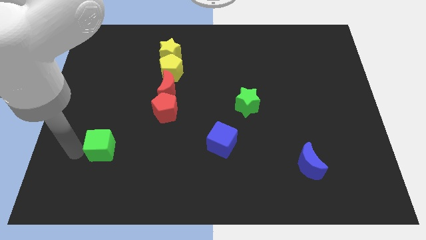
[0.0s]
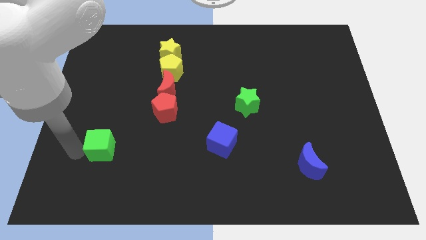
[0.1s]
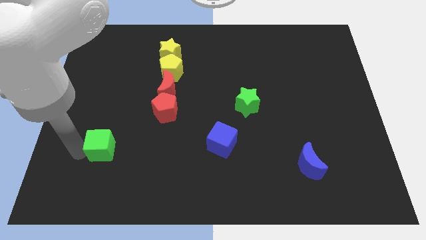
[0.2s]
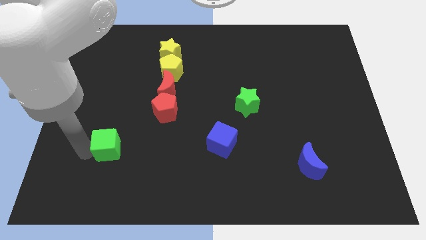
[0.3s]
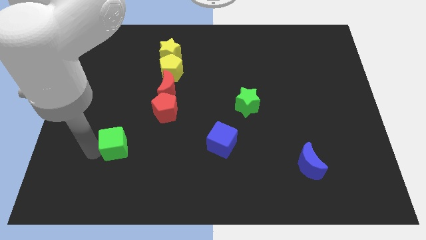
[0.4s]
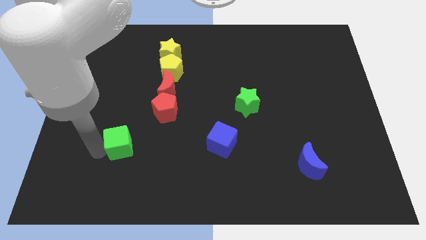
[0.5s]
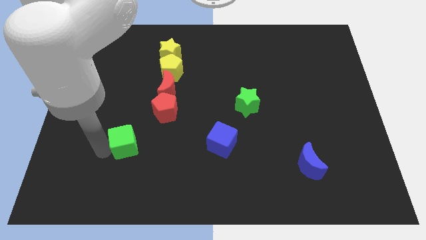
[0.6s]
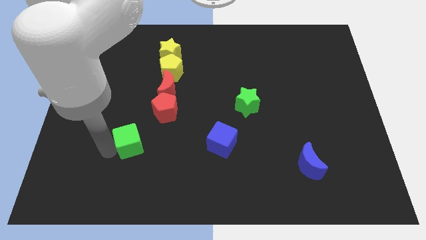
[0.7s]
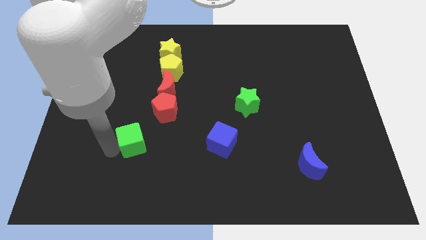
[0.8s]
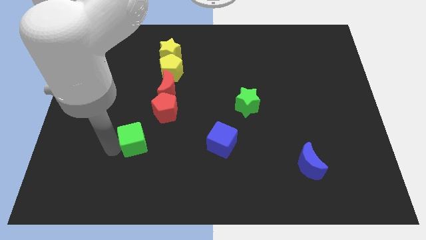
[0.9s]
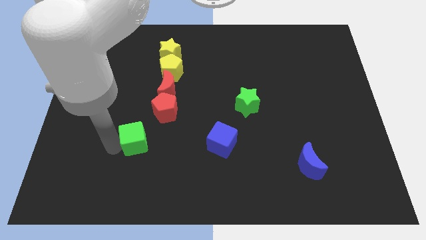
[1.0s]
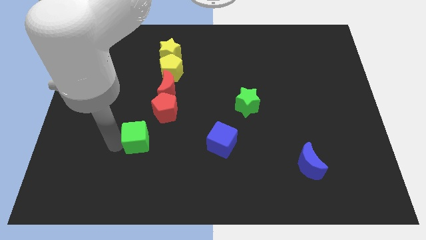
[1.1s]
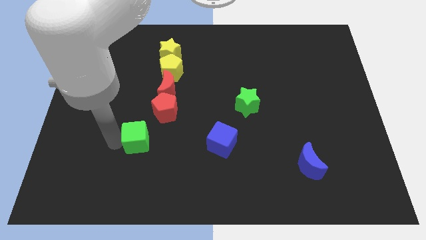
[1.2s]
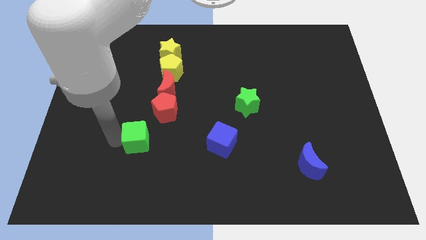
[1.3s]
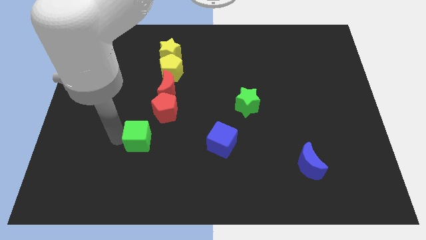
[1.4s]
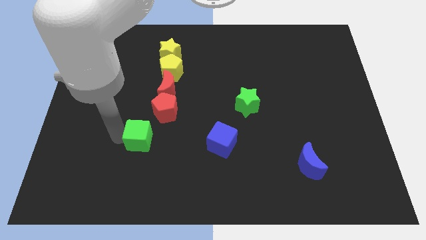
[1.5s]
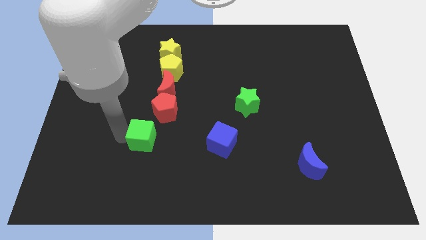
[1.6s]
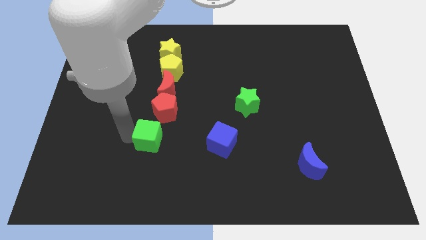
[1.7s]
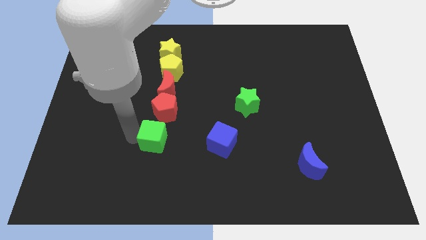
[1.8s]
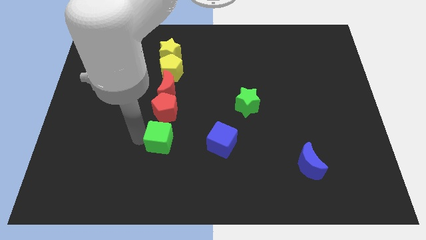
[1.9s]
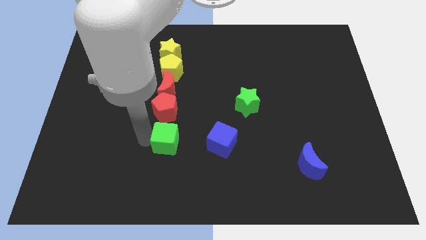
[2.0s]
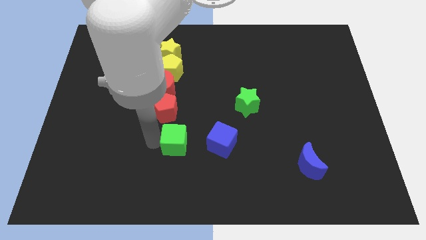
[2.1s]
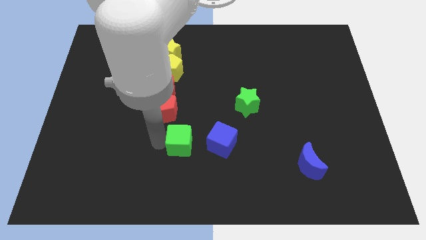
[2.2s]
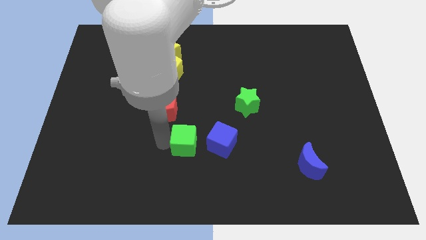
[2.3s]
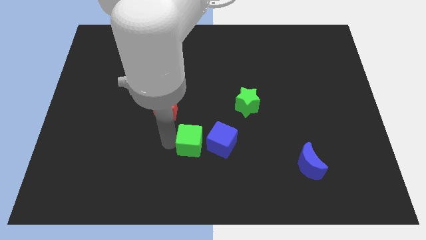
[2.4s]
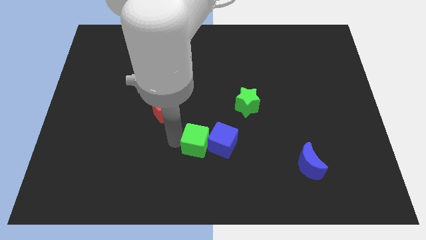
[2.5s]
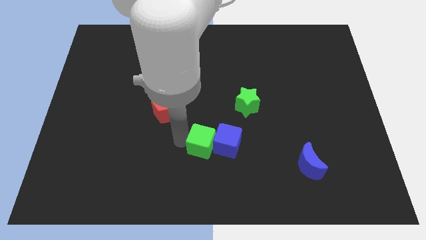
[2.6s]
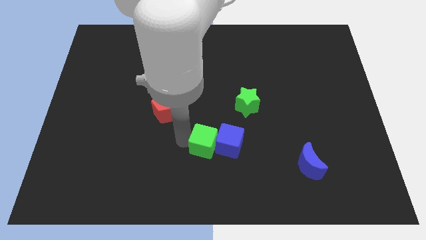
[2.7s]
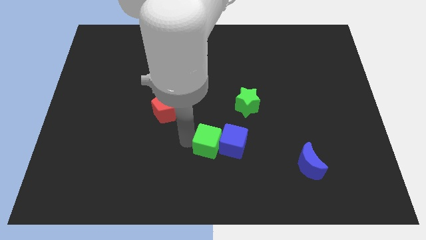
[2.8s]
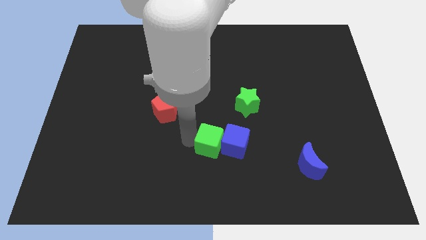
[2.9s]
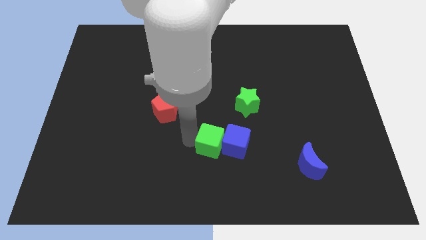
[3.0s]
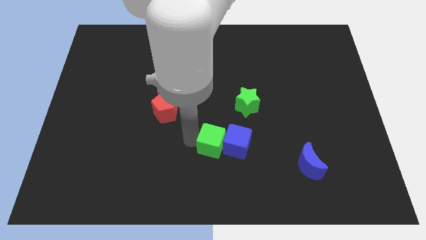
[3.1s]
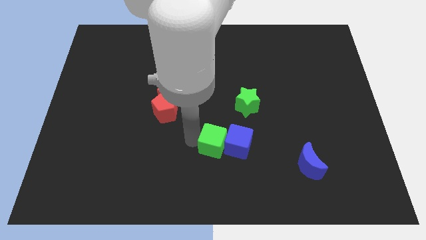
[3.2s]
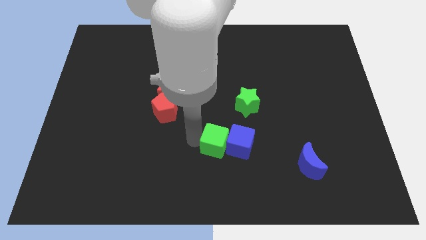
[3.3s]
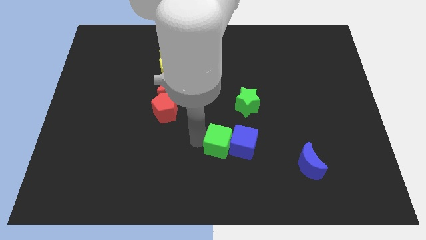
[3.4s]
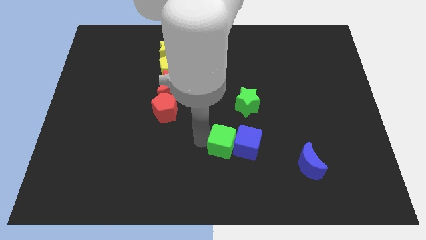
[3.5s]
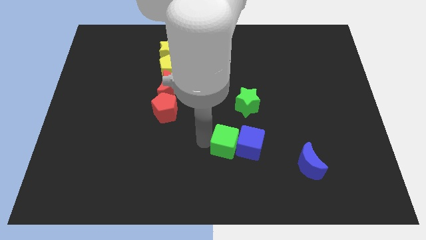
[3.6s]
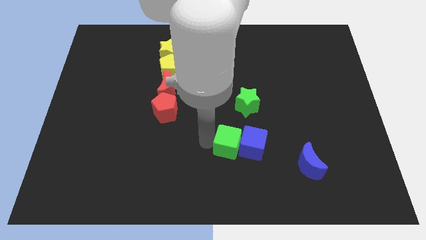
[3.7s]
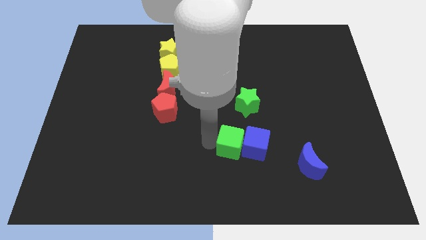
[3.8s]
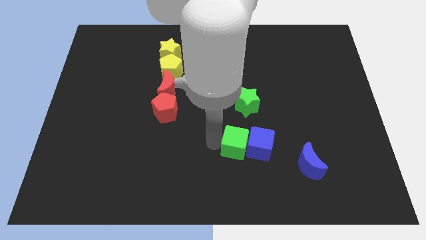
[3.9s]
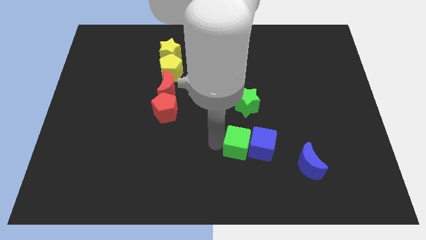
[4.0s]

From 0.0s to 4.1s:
move the green cube into blue cube

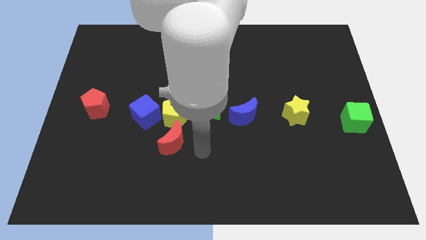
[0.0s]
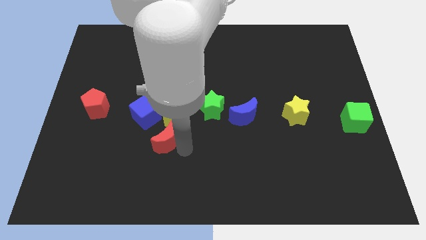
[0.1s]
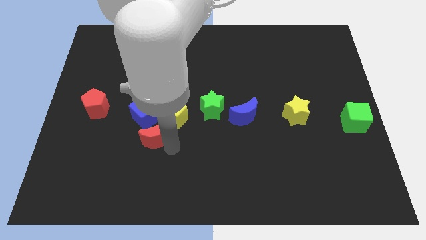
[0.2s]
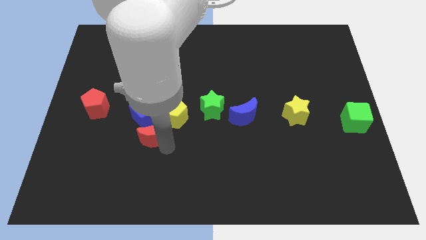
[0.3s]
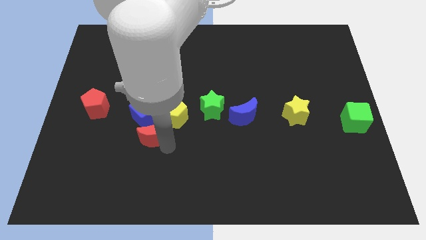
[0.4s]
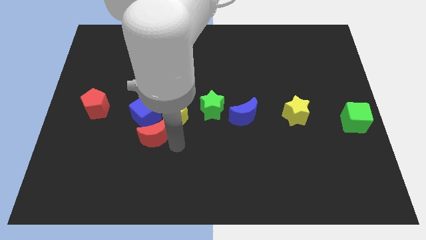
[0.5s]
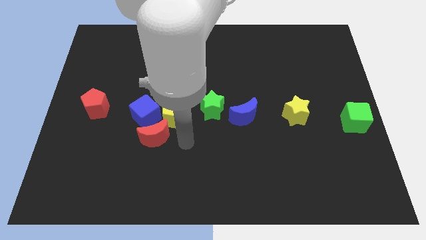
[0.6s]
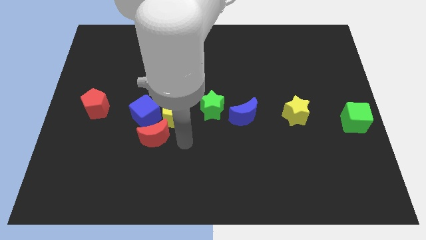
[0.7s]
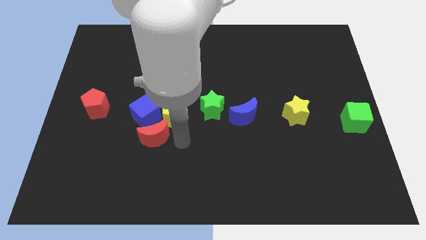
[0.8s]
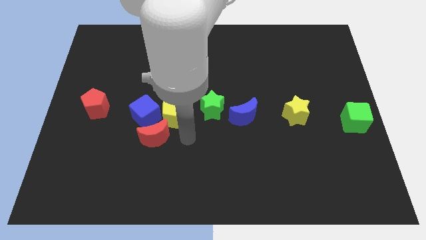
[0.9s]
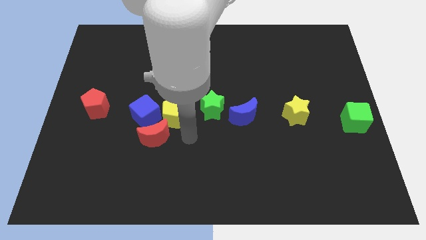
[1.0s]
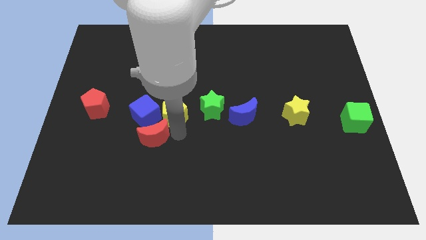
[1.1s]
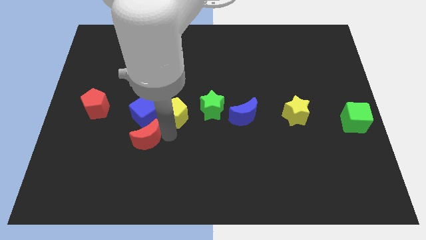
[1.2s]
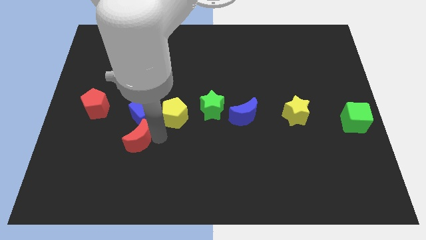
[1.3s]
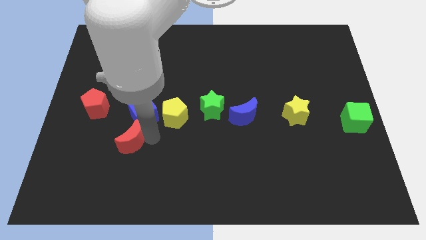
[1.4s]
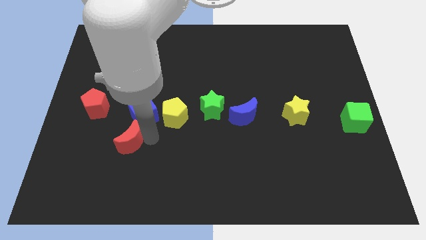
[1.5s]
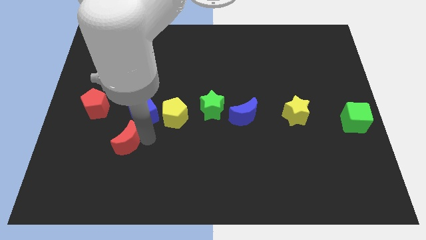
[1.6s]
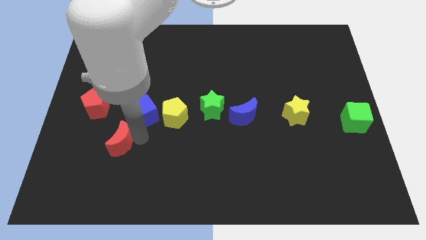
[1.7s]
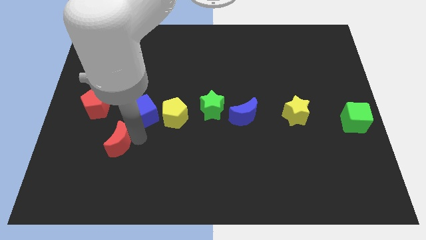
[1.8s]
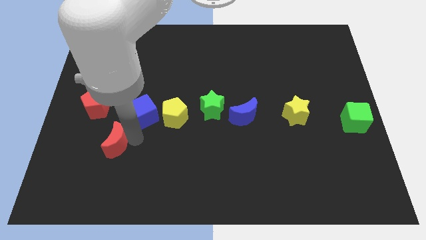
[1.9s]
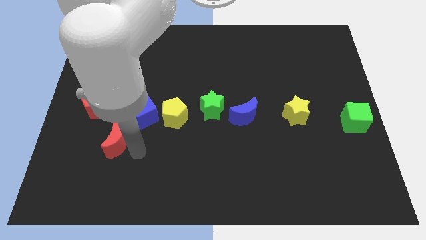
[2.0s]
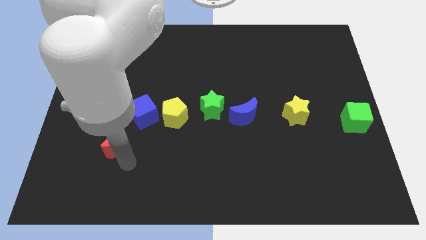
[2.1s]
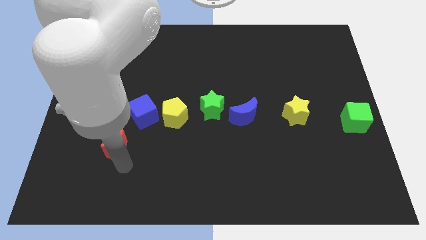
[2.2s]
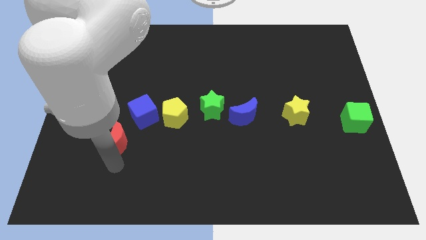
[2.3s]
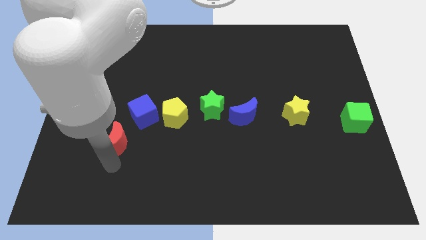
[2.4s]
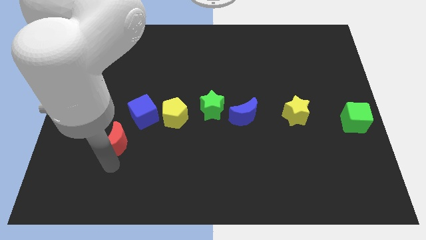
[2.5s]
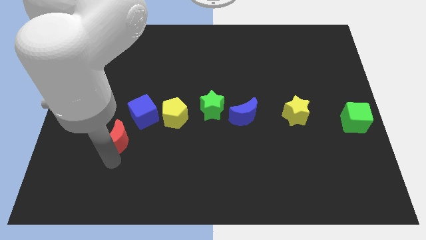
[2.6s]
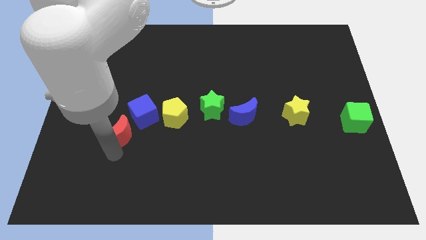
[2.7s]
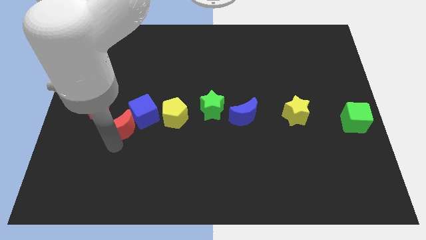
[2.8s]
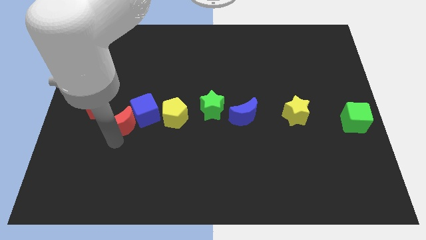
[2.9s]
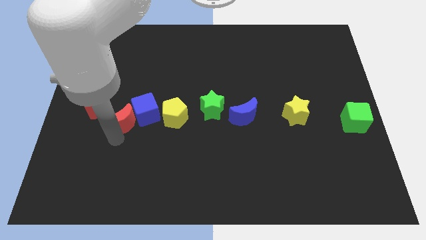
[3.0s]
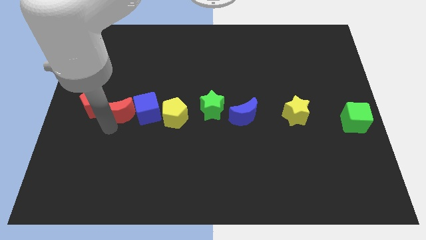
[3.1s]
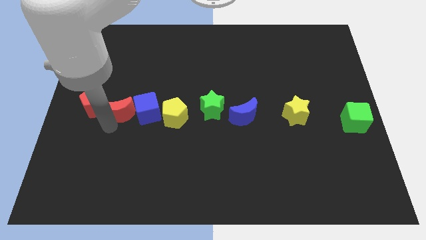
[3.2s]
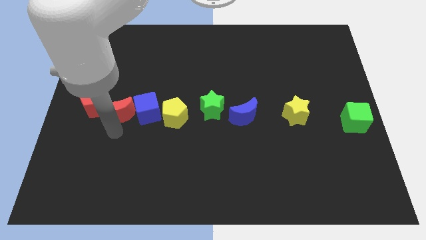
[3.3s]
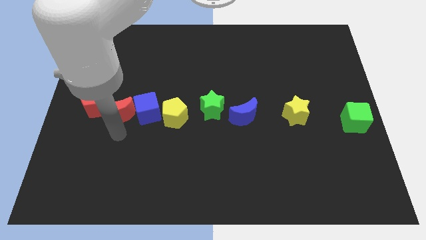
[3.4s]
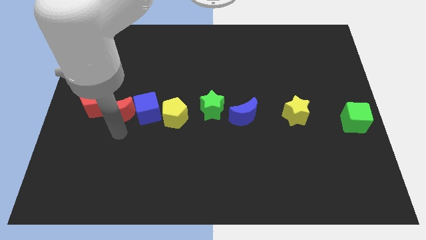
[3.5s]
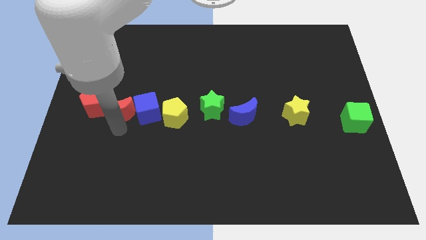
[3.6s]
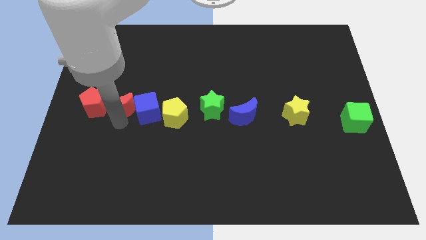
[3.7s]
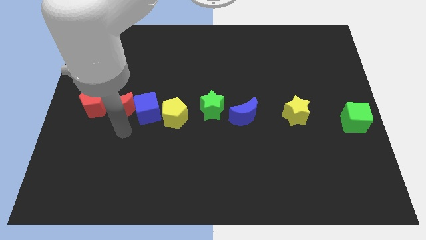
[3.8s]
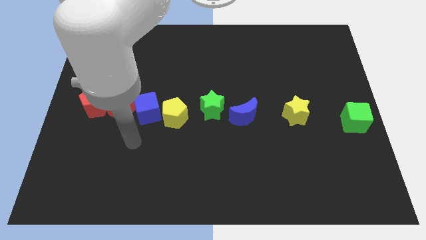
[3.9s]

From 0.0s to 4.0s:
put the red moon horizontally in between the blue cube and red pentagon

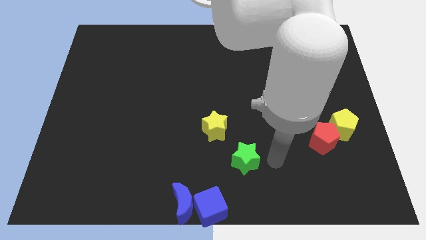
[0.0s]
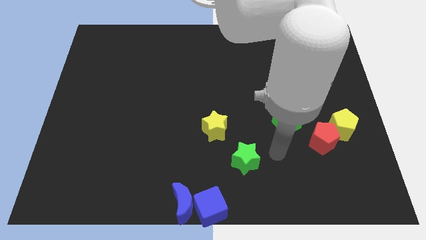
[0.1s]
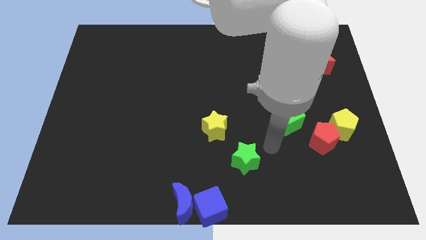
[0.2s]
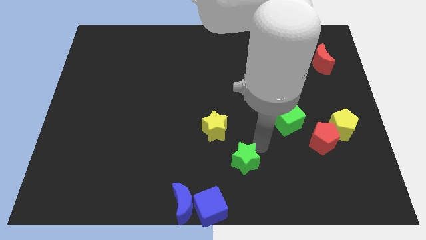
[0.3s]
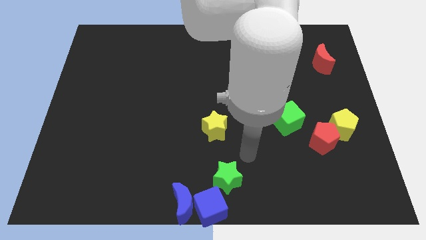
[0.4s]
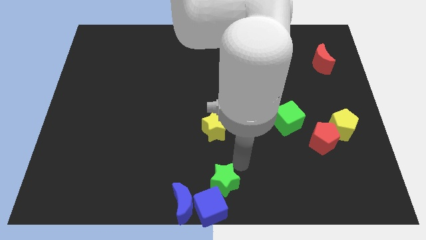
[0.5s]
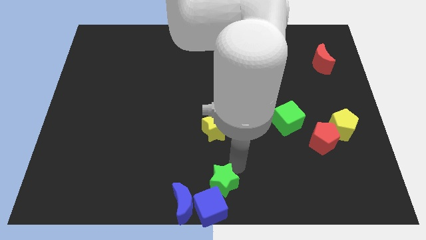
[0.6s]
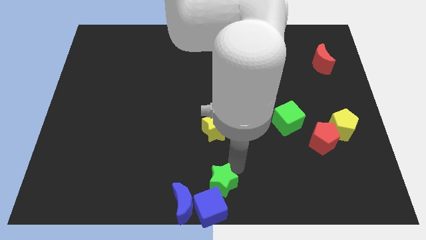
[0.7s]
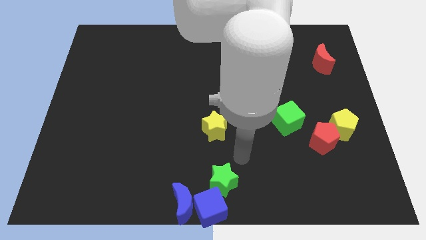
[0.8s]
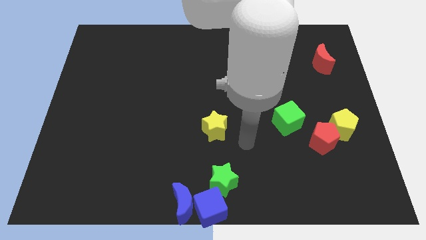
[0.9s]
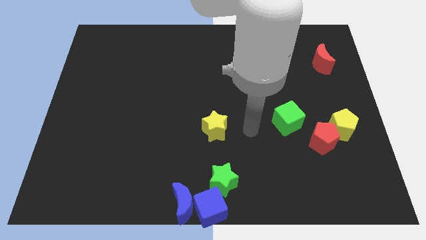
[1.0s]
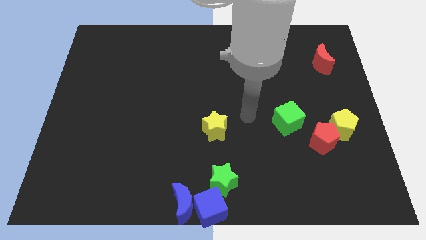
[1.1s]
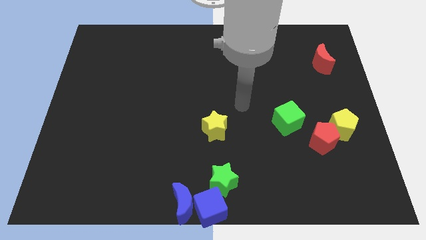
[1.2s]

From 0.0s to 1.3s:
push the green star into the blue cube
